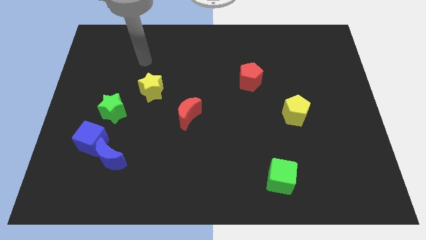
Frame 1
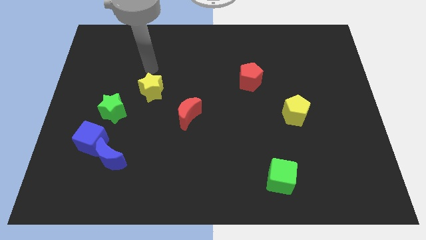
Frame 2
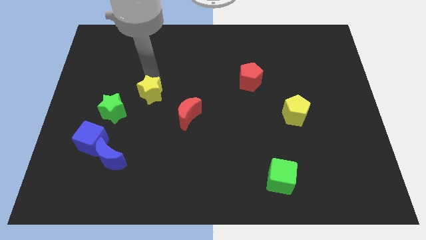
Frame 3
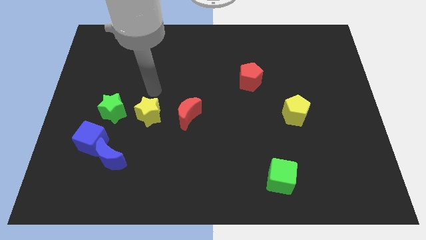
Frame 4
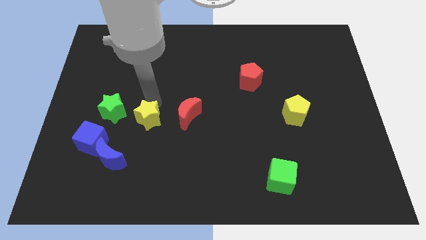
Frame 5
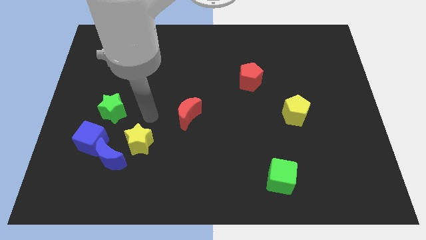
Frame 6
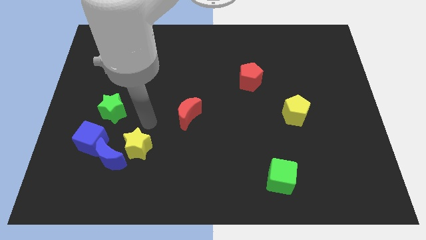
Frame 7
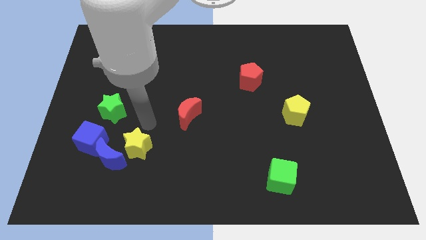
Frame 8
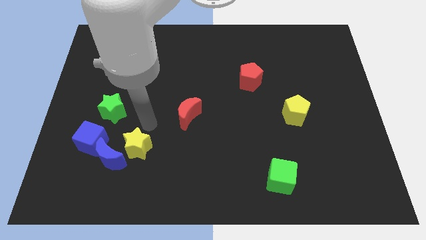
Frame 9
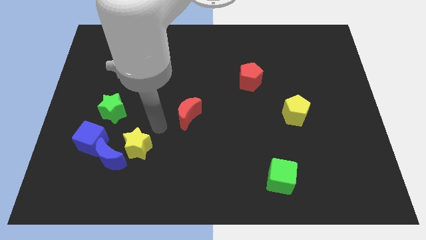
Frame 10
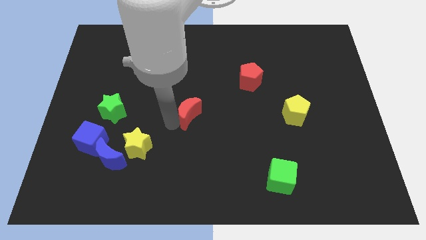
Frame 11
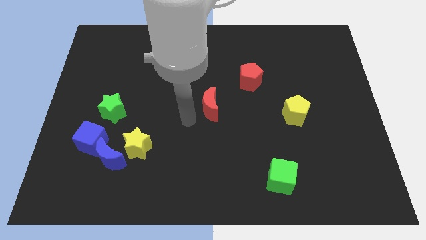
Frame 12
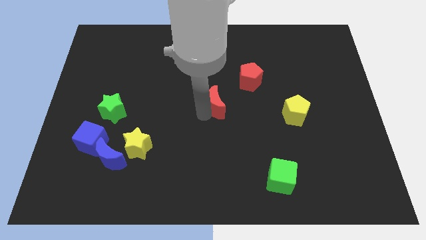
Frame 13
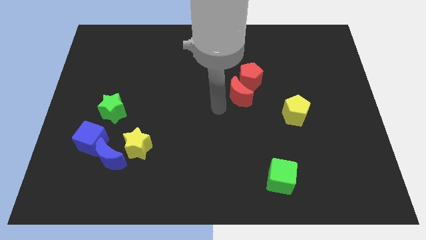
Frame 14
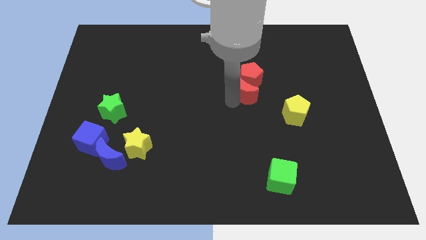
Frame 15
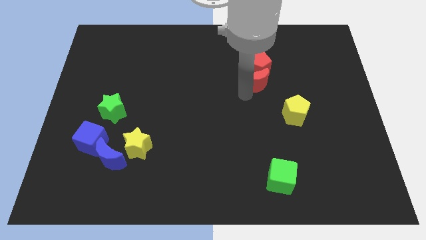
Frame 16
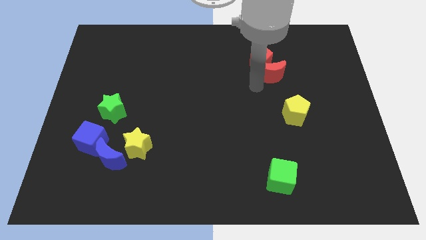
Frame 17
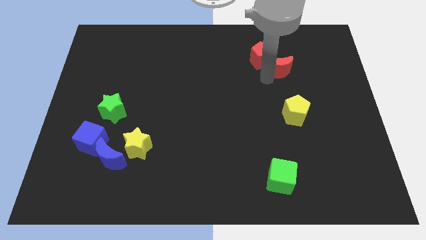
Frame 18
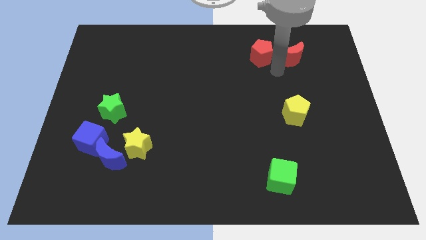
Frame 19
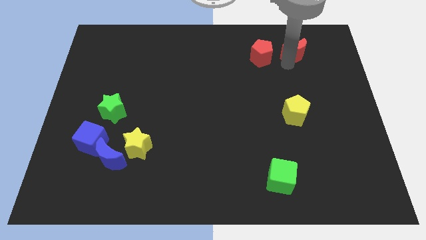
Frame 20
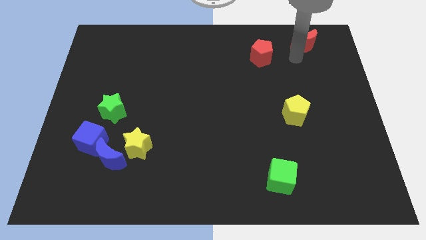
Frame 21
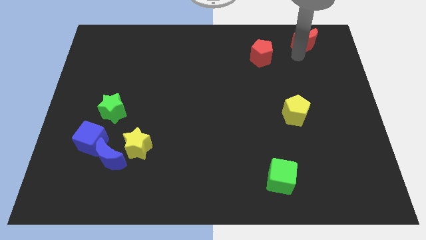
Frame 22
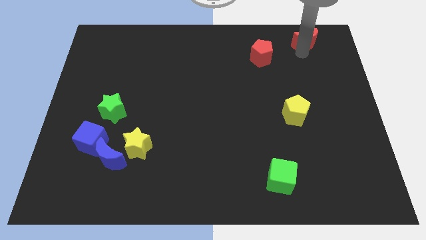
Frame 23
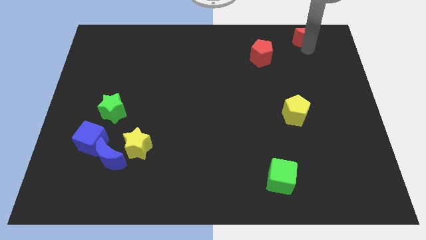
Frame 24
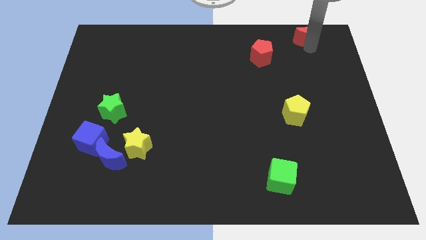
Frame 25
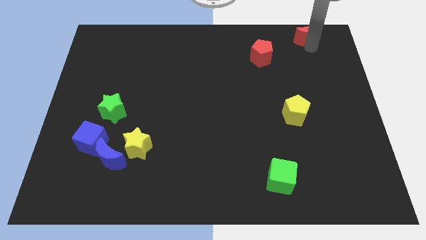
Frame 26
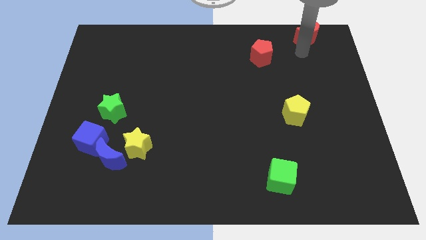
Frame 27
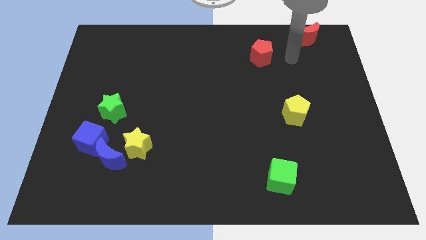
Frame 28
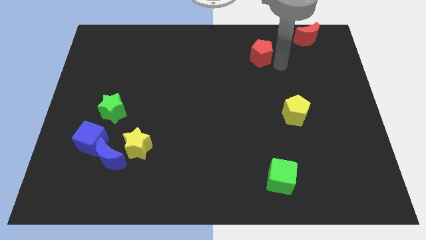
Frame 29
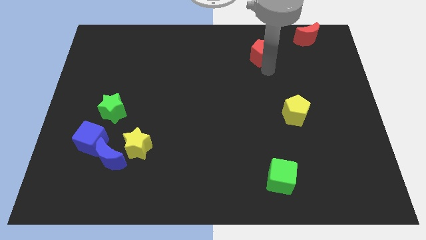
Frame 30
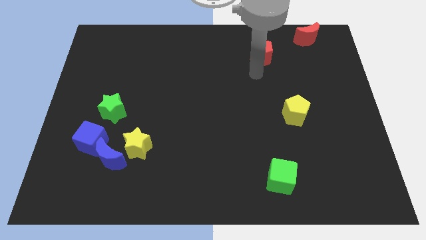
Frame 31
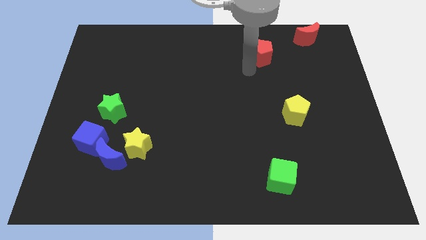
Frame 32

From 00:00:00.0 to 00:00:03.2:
place the red crescent at the top right of the board

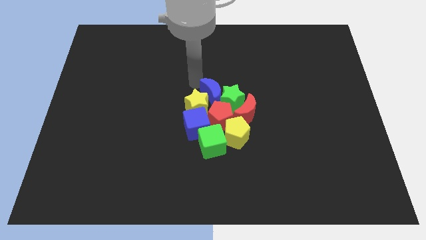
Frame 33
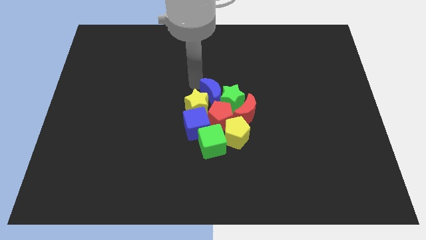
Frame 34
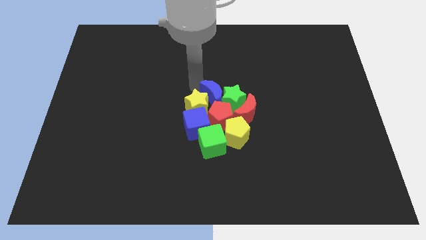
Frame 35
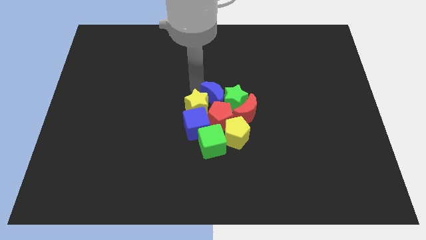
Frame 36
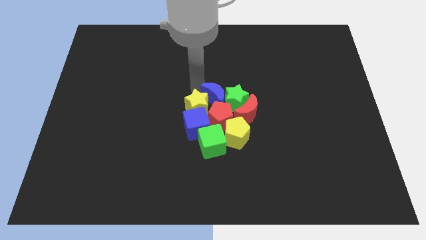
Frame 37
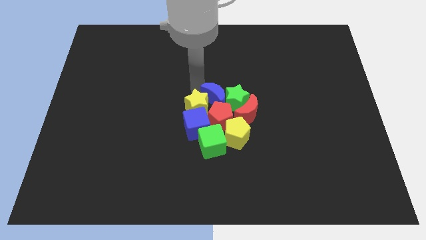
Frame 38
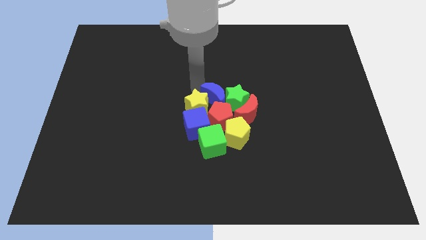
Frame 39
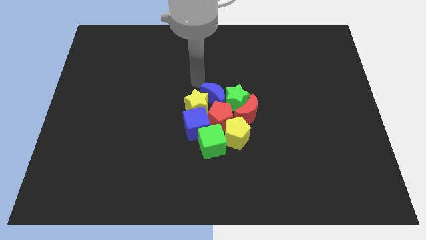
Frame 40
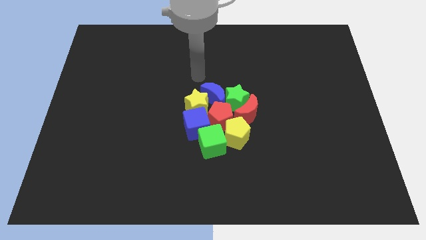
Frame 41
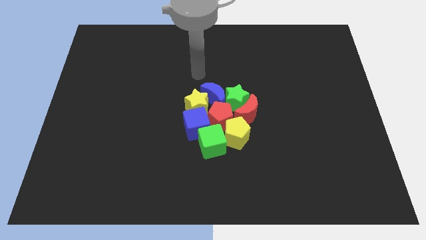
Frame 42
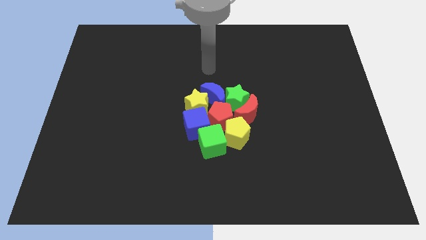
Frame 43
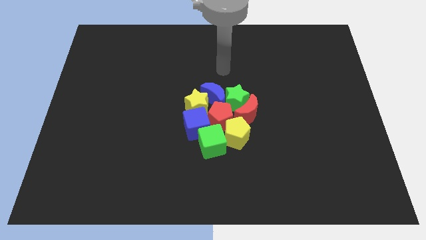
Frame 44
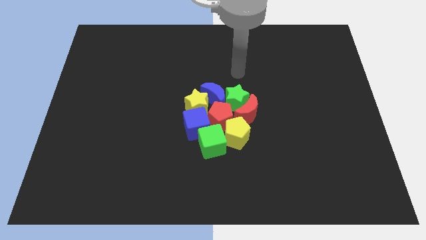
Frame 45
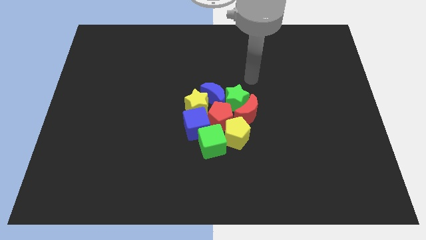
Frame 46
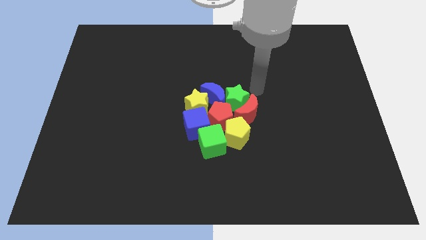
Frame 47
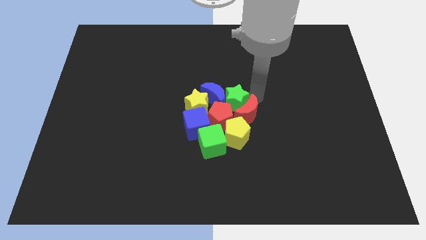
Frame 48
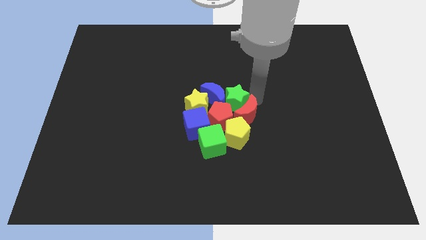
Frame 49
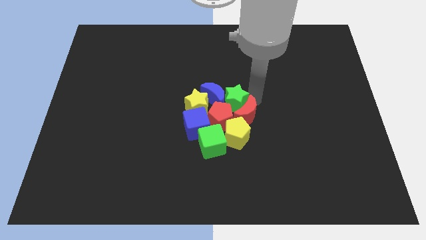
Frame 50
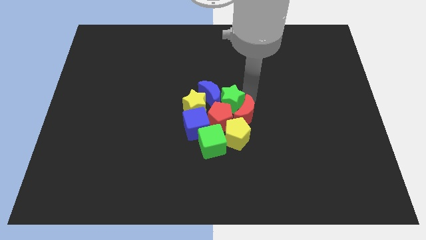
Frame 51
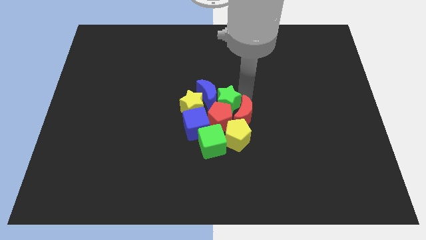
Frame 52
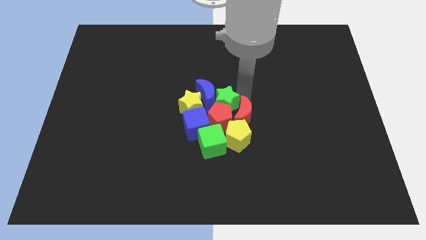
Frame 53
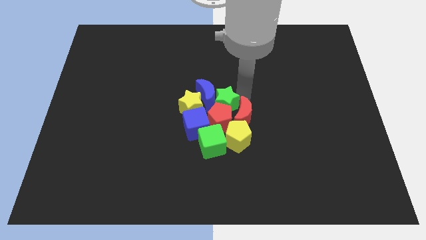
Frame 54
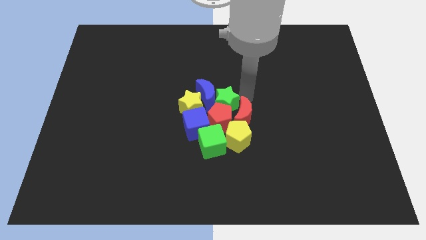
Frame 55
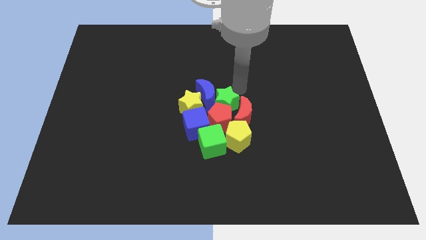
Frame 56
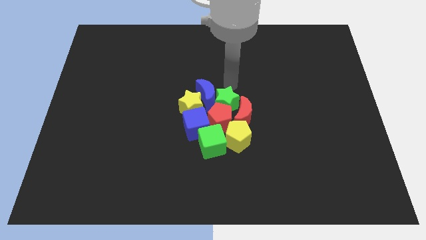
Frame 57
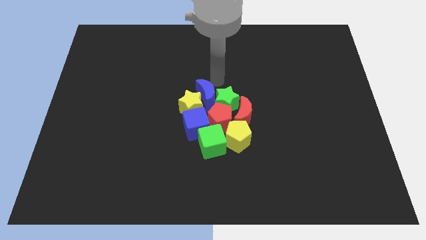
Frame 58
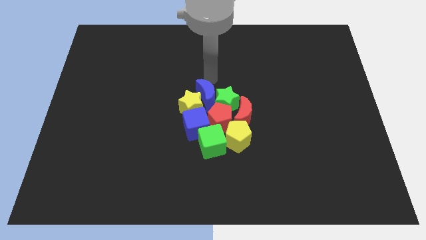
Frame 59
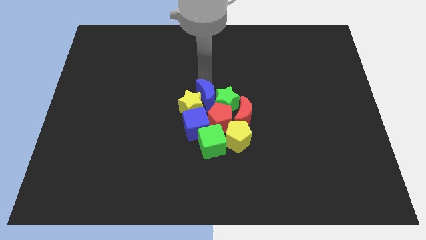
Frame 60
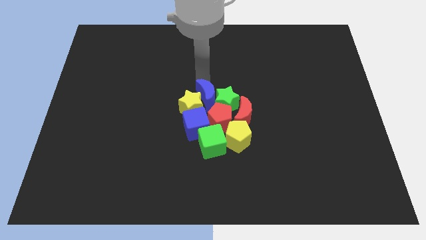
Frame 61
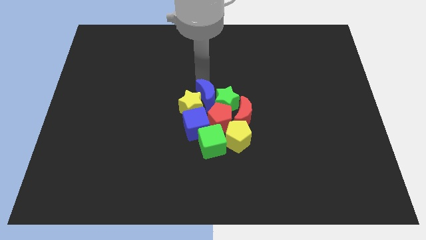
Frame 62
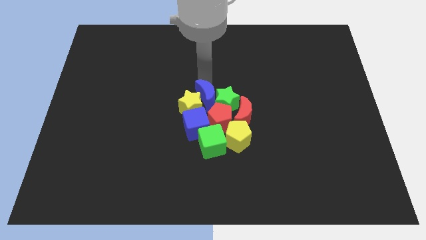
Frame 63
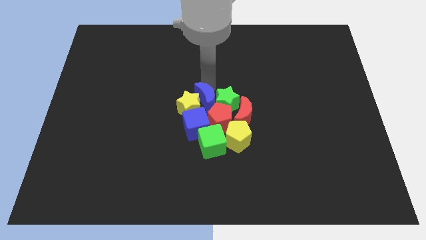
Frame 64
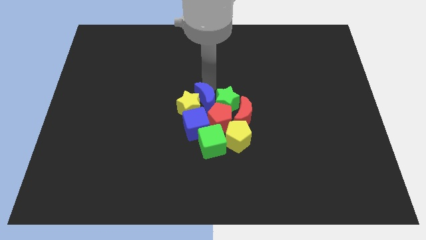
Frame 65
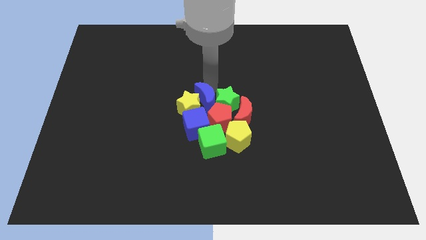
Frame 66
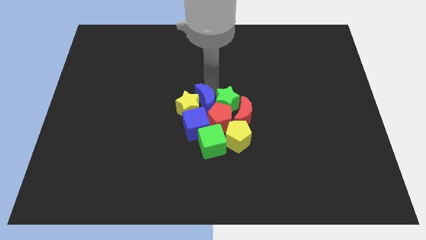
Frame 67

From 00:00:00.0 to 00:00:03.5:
push the green star and blue crescent towards the center of the board

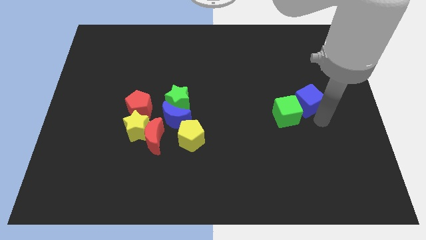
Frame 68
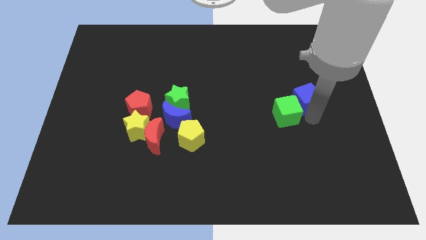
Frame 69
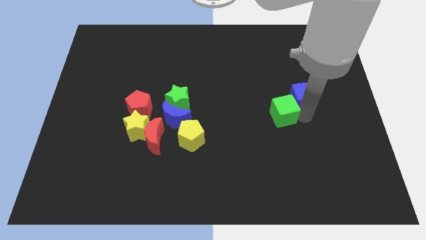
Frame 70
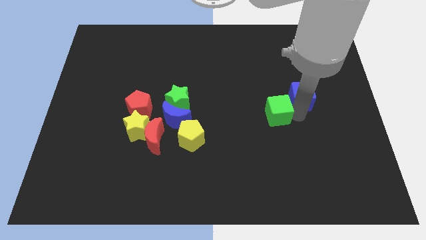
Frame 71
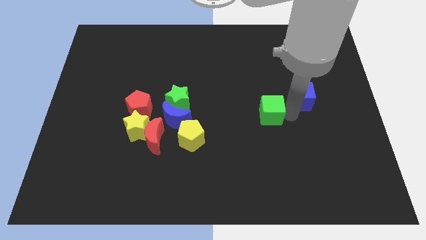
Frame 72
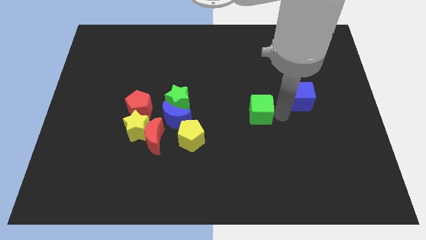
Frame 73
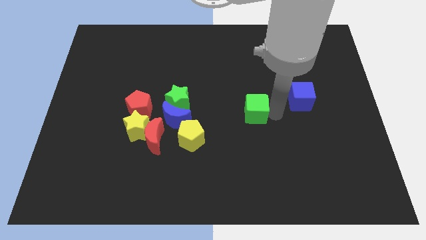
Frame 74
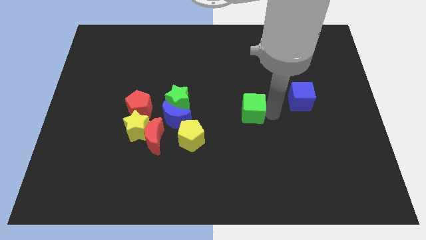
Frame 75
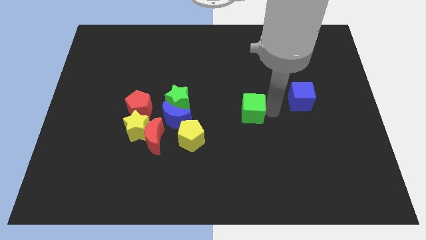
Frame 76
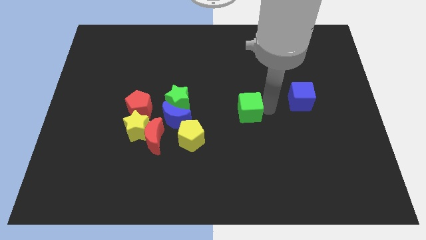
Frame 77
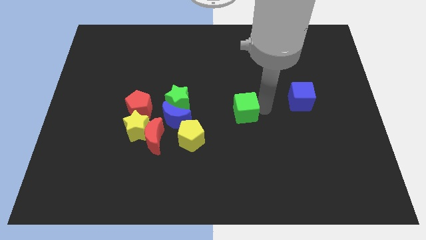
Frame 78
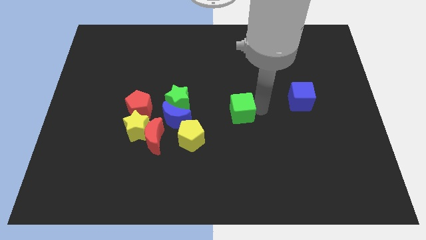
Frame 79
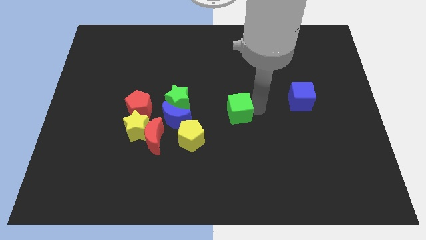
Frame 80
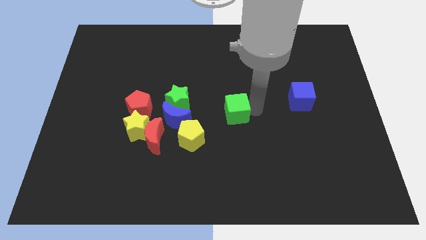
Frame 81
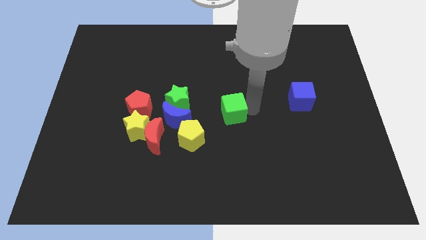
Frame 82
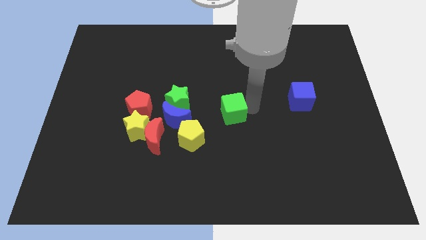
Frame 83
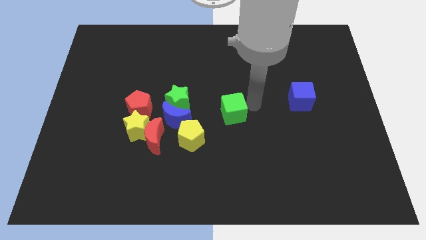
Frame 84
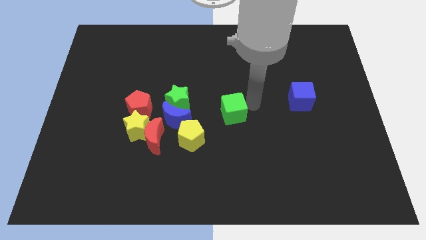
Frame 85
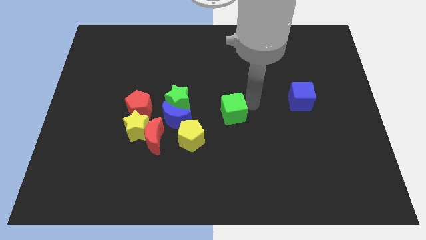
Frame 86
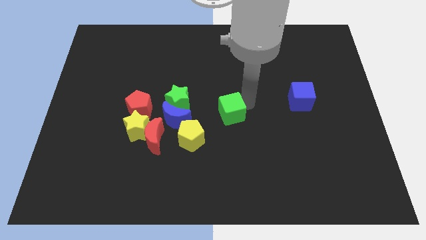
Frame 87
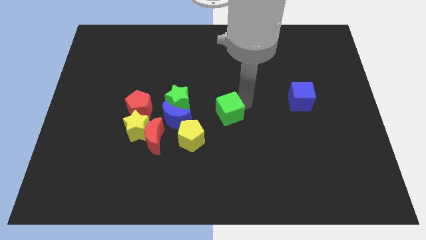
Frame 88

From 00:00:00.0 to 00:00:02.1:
separate green cube from blue cube
